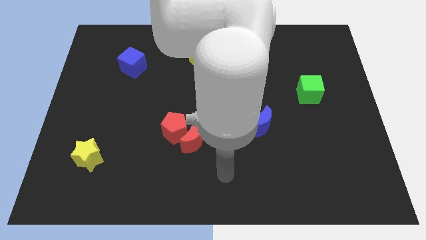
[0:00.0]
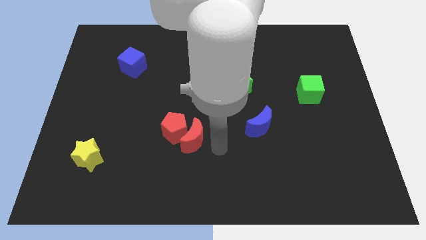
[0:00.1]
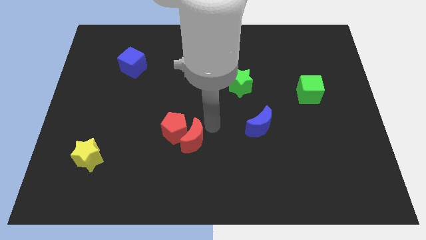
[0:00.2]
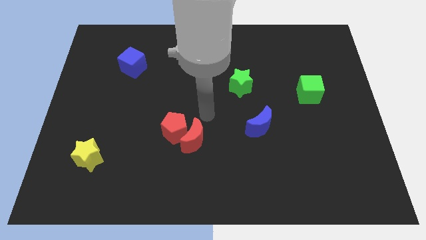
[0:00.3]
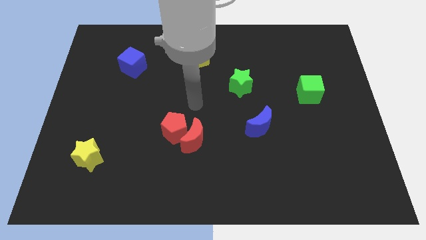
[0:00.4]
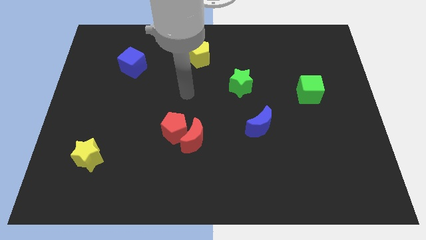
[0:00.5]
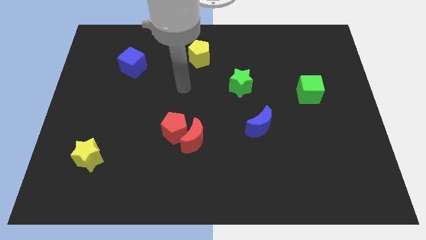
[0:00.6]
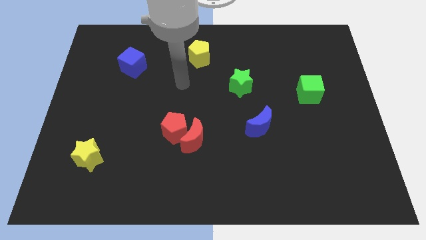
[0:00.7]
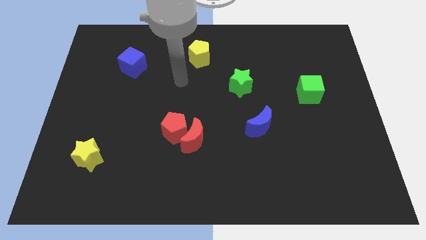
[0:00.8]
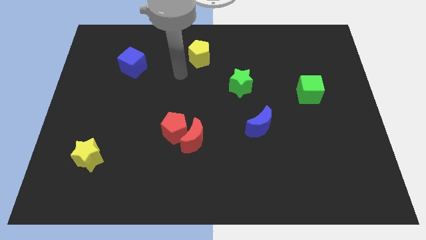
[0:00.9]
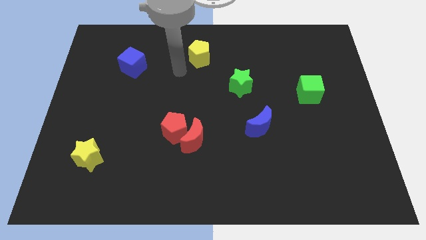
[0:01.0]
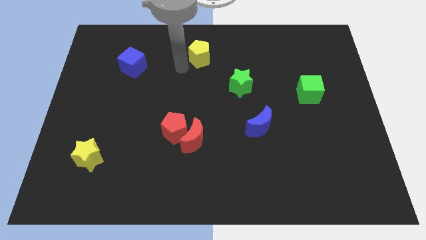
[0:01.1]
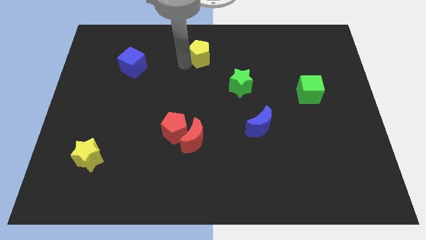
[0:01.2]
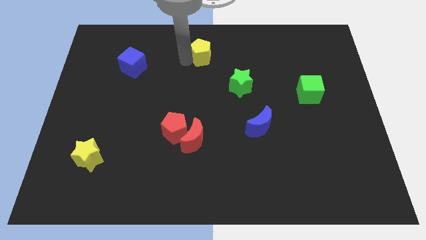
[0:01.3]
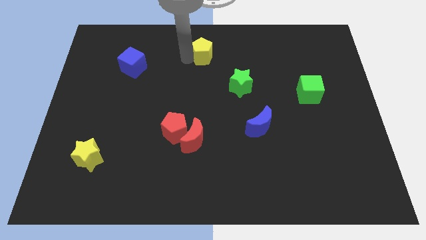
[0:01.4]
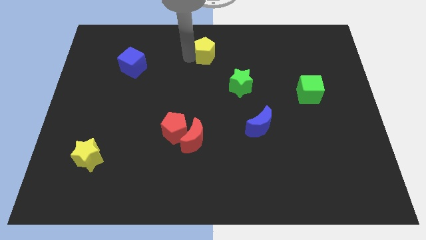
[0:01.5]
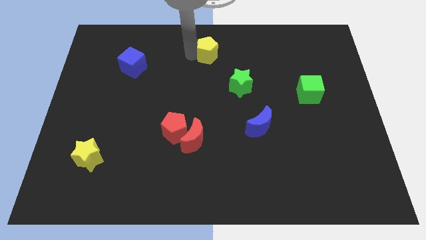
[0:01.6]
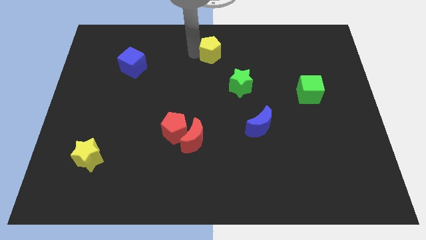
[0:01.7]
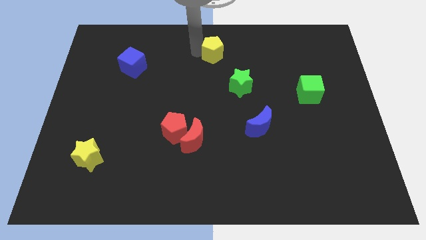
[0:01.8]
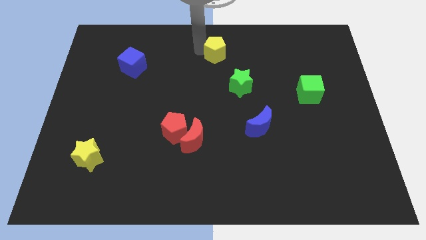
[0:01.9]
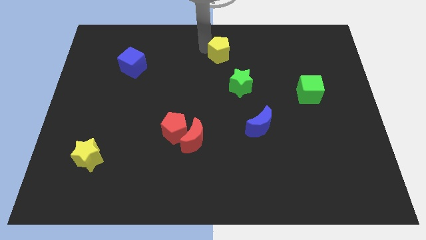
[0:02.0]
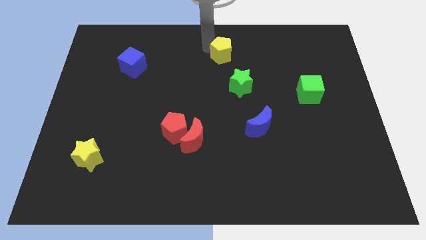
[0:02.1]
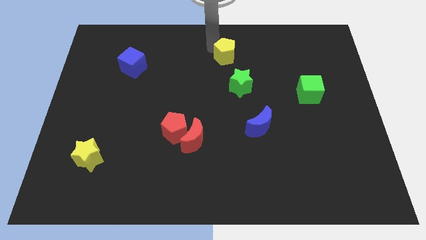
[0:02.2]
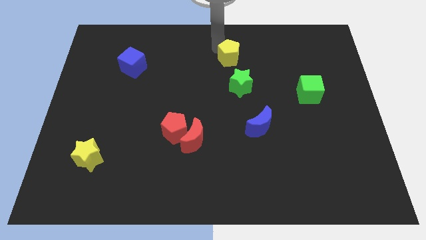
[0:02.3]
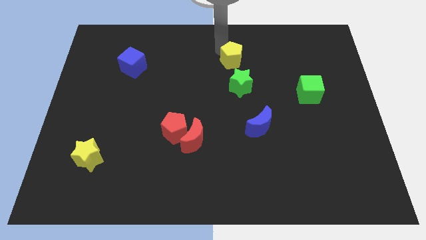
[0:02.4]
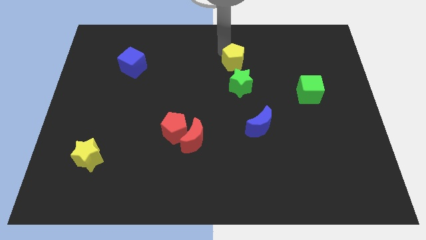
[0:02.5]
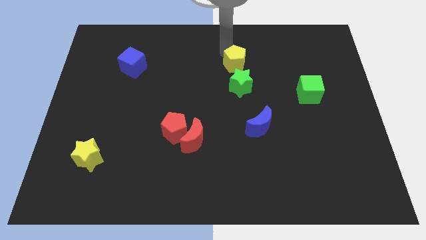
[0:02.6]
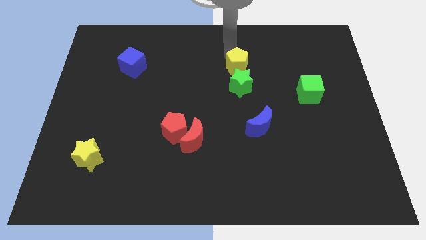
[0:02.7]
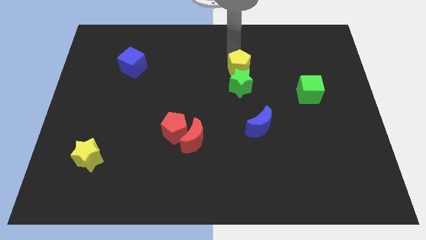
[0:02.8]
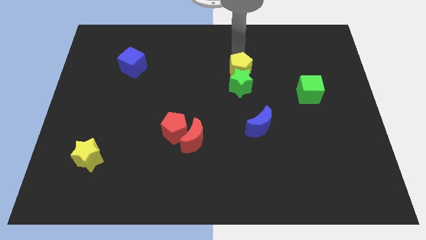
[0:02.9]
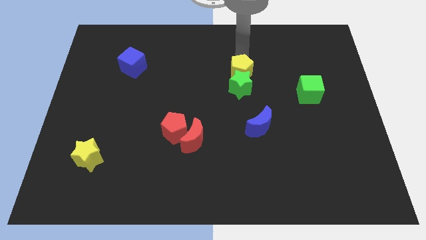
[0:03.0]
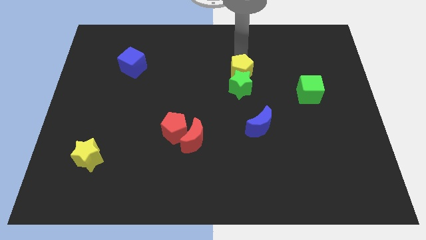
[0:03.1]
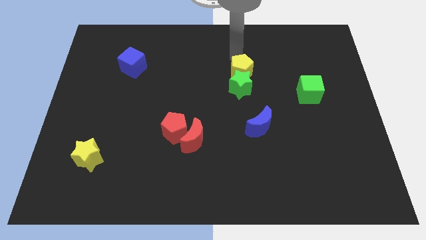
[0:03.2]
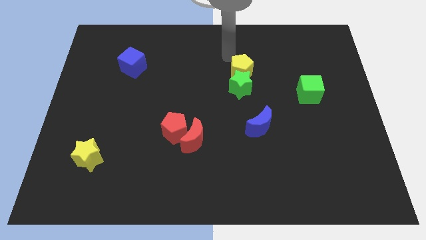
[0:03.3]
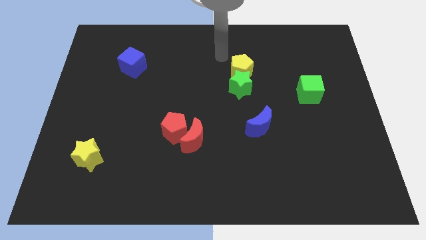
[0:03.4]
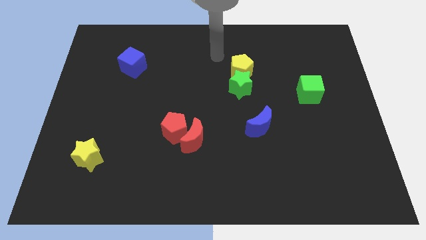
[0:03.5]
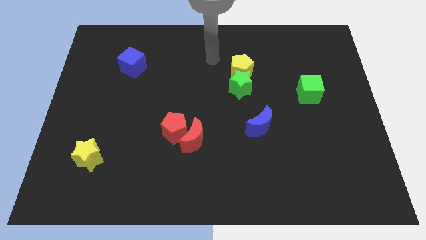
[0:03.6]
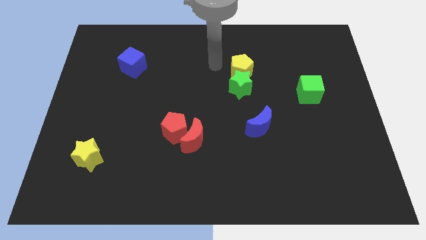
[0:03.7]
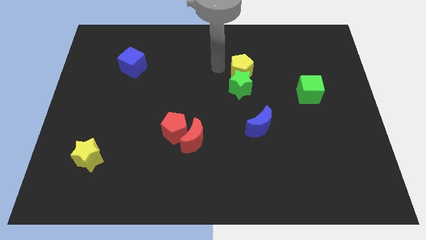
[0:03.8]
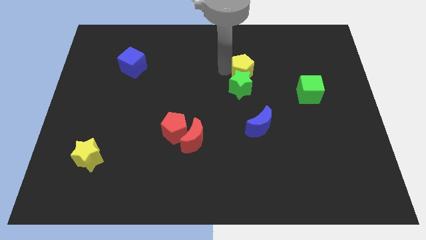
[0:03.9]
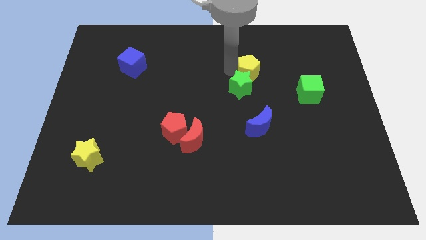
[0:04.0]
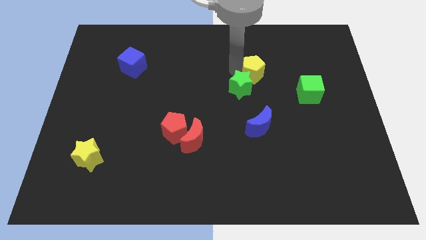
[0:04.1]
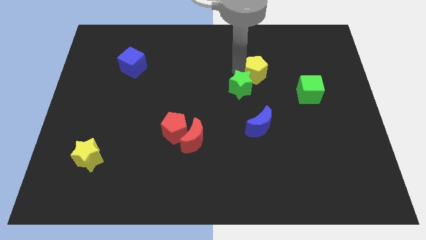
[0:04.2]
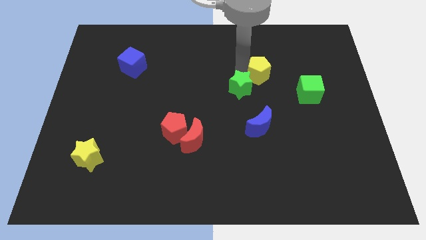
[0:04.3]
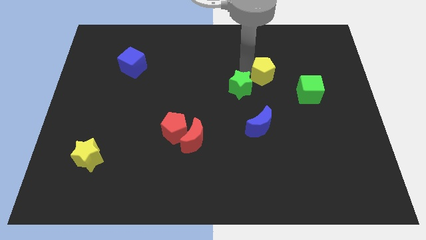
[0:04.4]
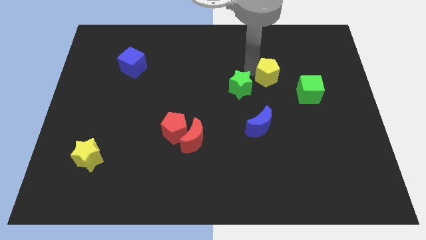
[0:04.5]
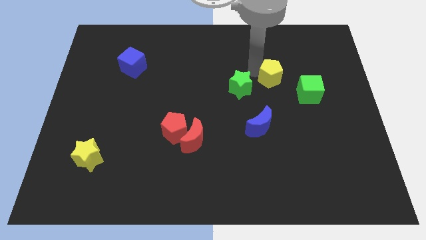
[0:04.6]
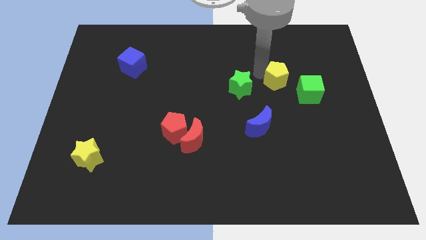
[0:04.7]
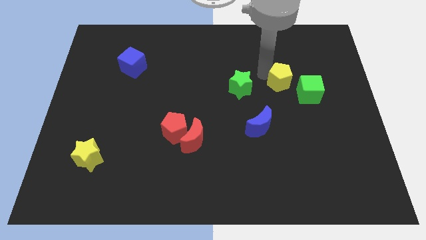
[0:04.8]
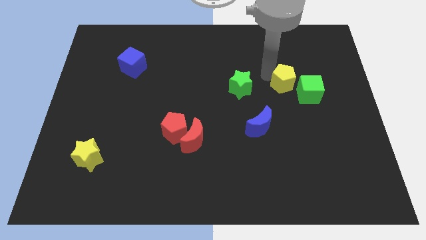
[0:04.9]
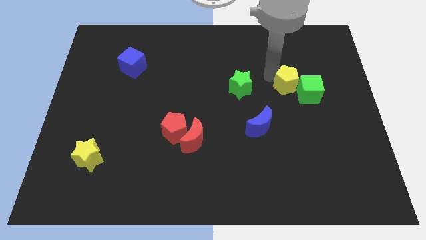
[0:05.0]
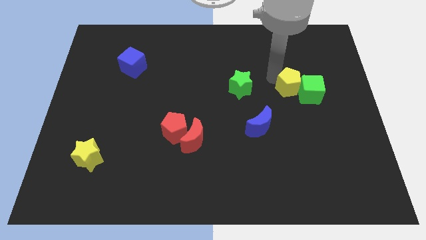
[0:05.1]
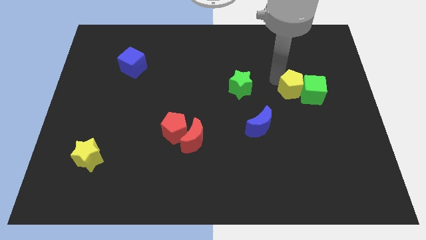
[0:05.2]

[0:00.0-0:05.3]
put the yellow pentagon close to the green cube

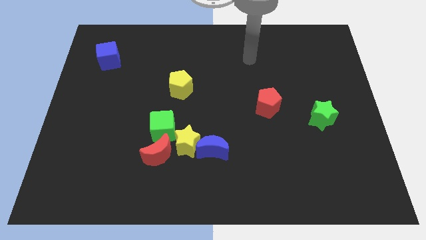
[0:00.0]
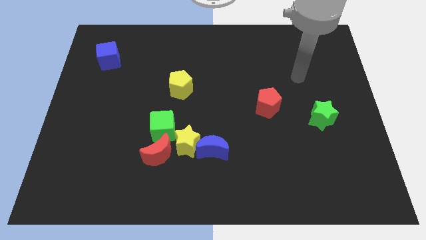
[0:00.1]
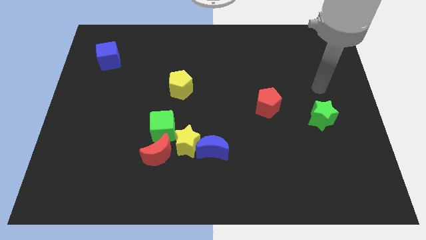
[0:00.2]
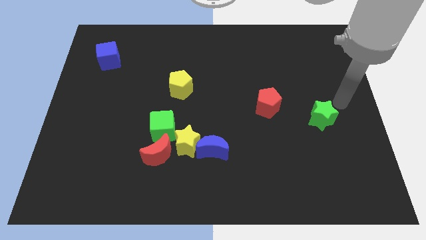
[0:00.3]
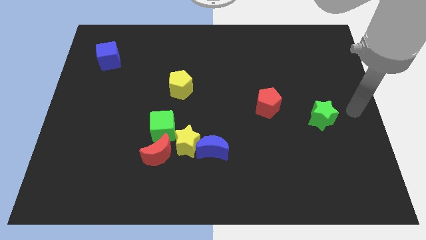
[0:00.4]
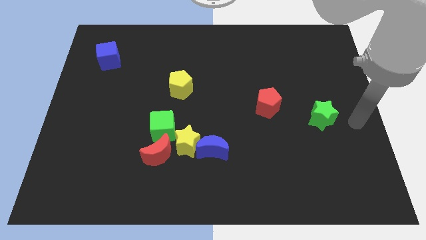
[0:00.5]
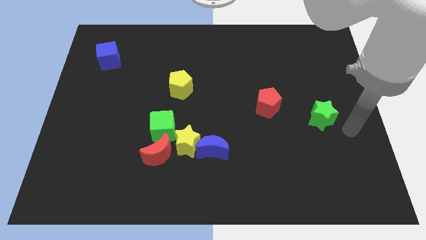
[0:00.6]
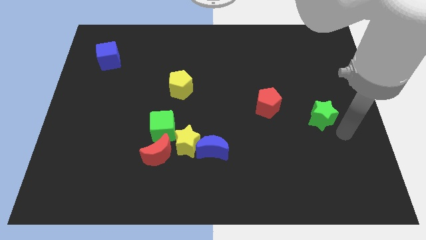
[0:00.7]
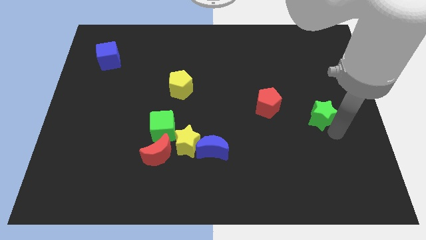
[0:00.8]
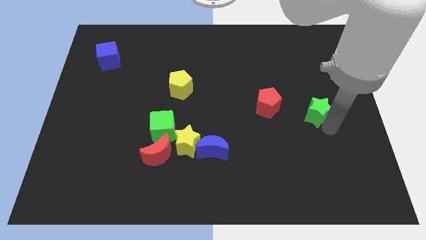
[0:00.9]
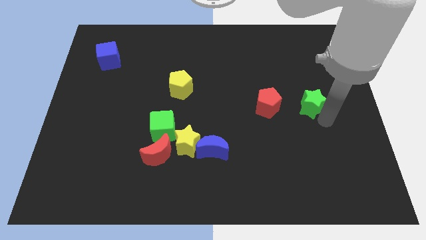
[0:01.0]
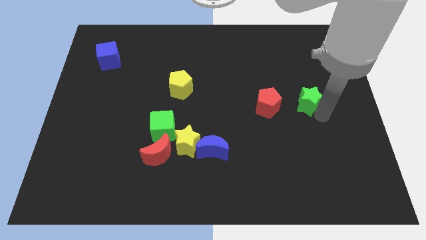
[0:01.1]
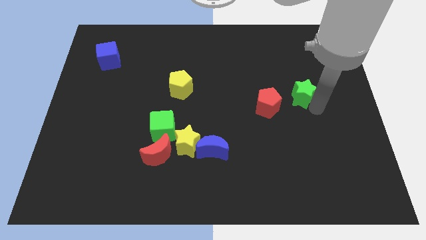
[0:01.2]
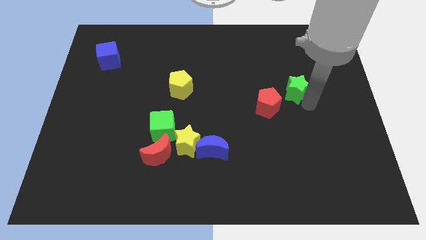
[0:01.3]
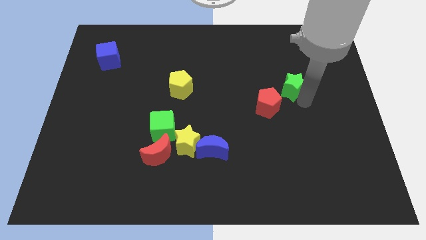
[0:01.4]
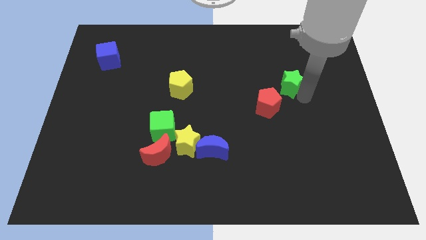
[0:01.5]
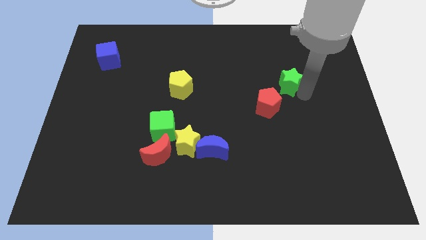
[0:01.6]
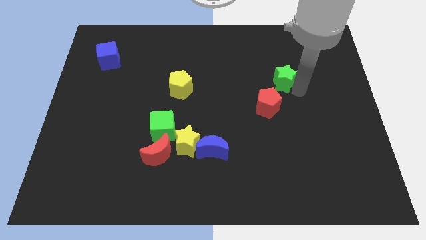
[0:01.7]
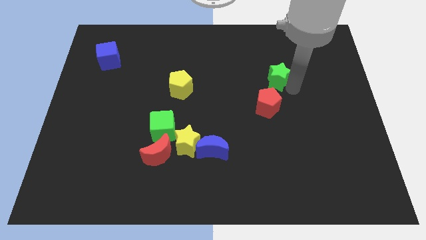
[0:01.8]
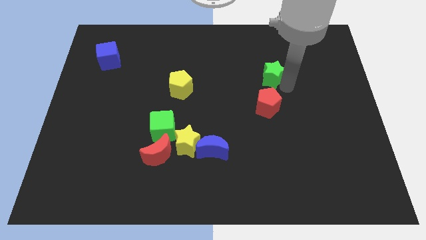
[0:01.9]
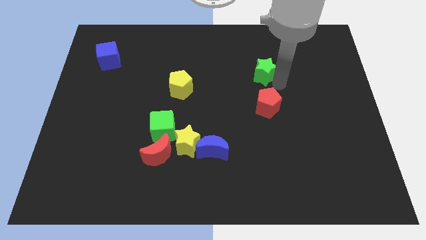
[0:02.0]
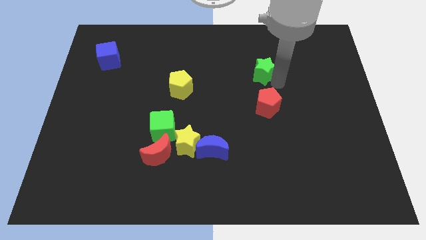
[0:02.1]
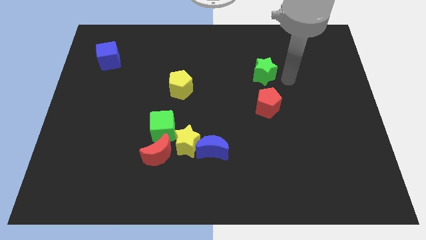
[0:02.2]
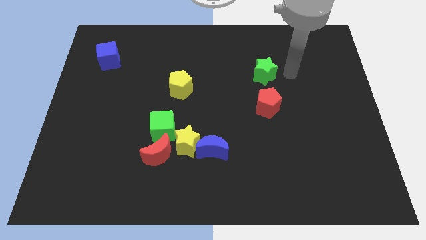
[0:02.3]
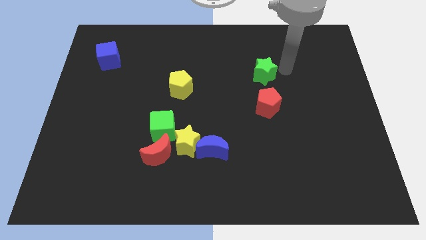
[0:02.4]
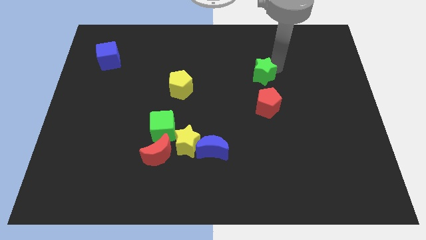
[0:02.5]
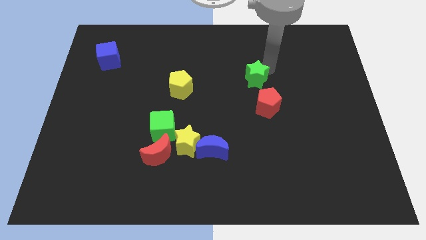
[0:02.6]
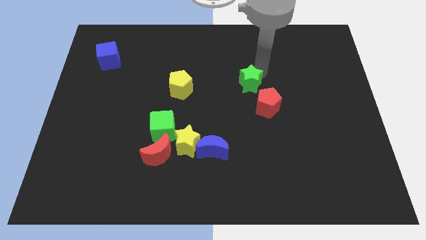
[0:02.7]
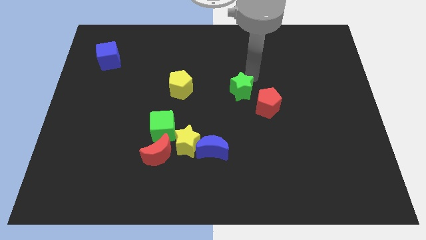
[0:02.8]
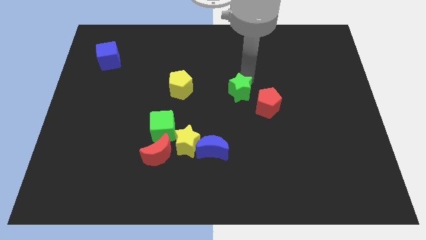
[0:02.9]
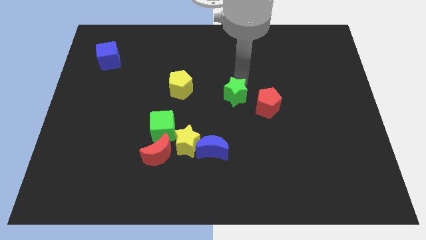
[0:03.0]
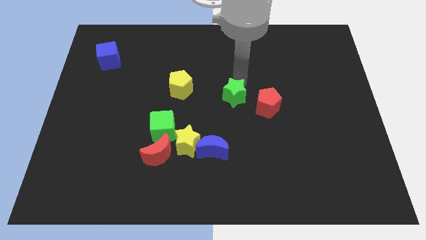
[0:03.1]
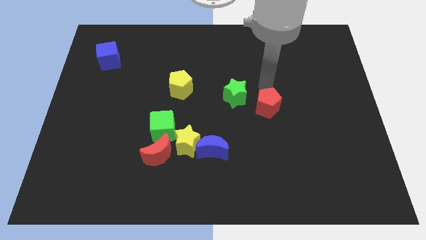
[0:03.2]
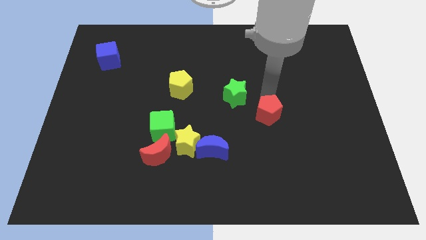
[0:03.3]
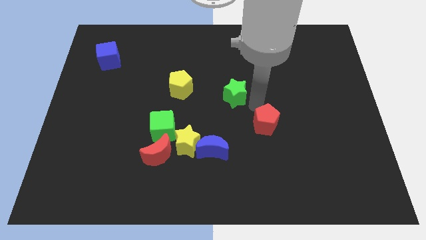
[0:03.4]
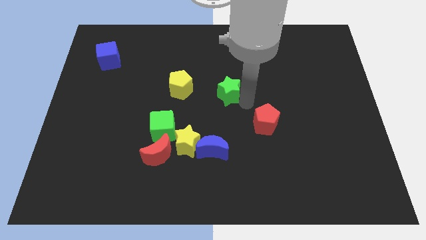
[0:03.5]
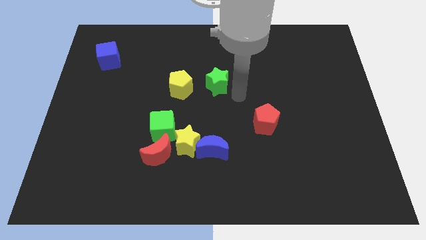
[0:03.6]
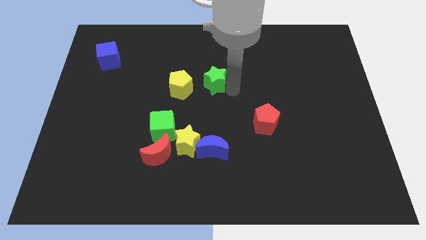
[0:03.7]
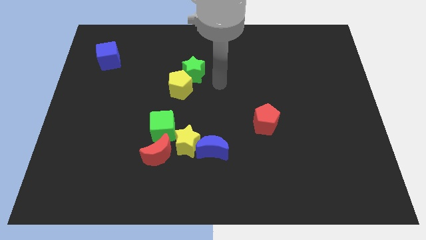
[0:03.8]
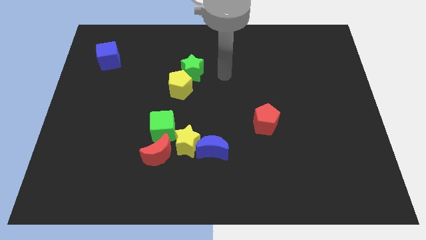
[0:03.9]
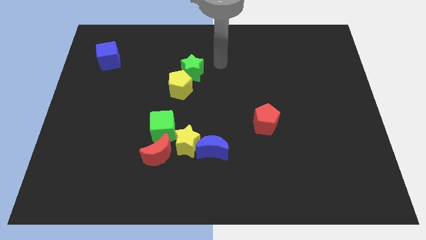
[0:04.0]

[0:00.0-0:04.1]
put the green star next to the yellow pentagon
